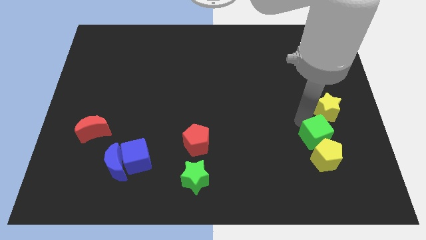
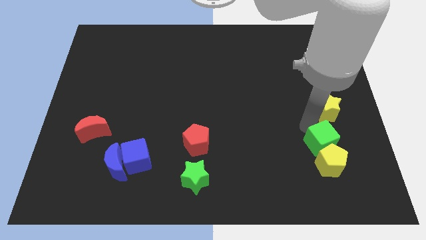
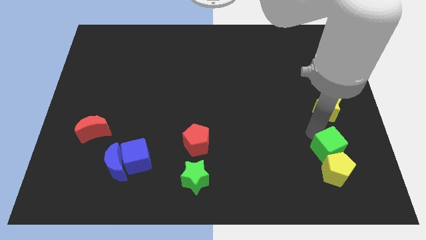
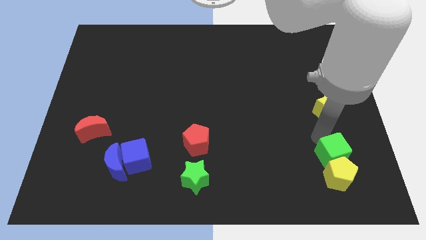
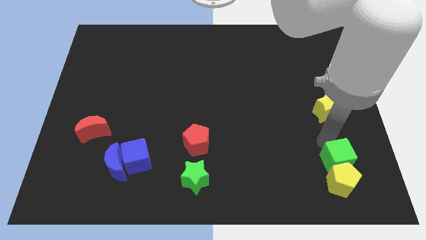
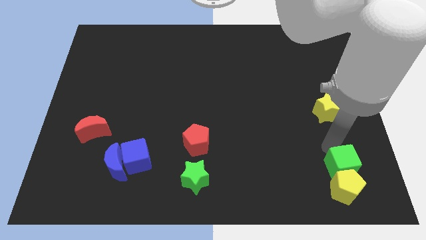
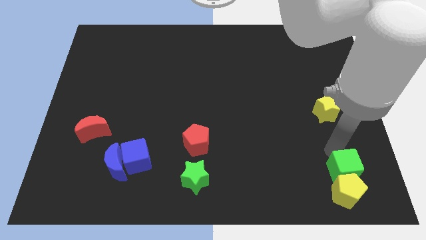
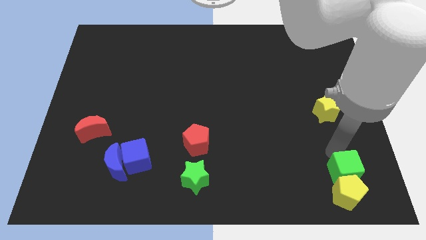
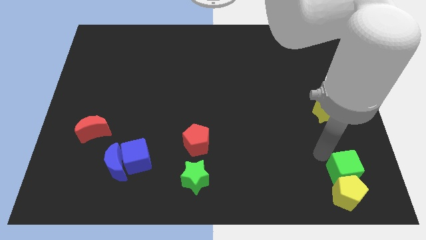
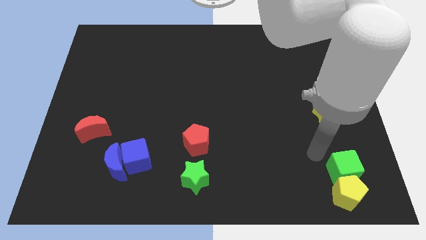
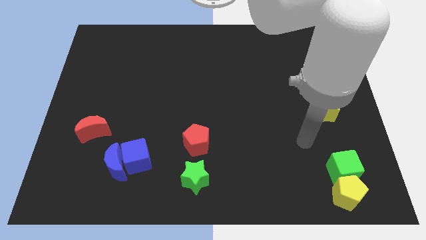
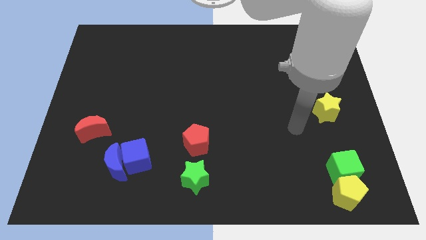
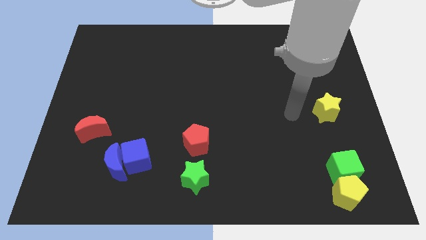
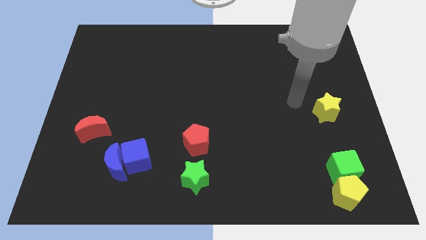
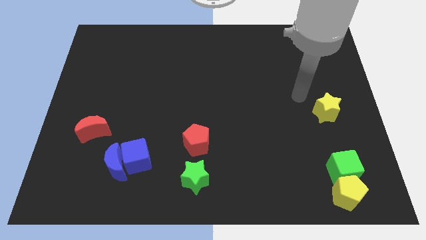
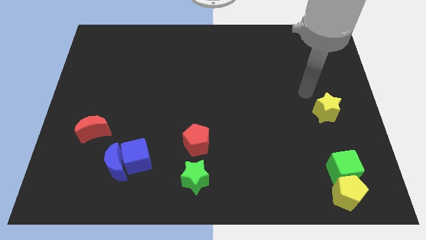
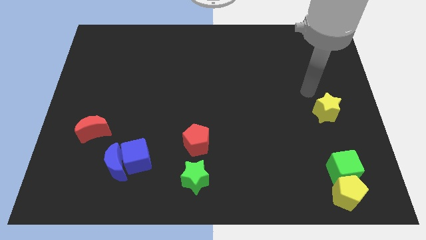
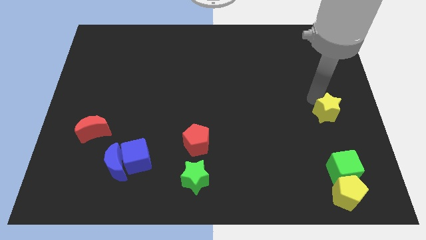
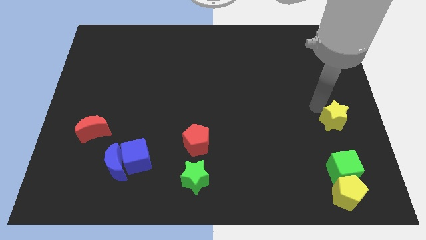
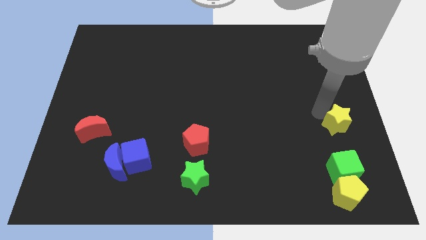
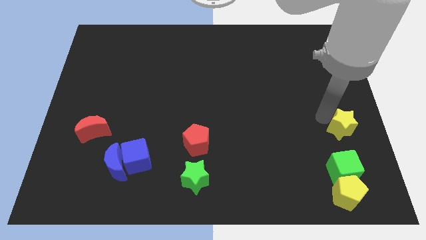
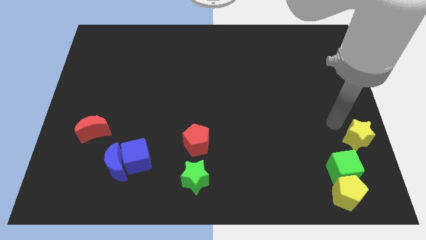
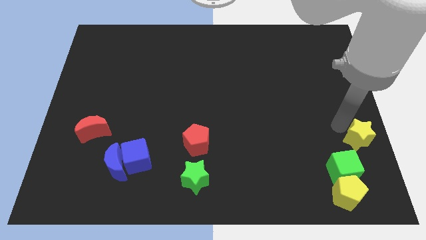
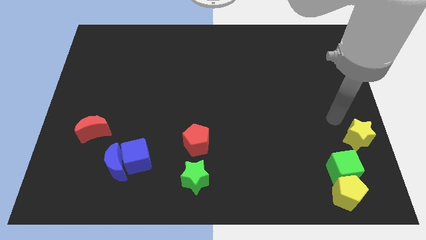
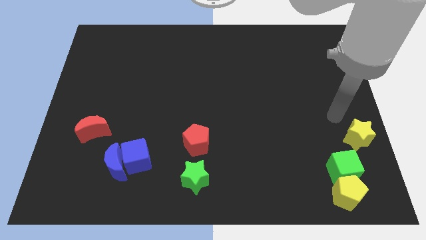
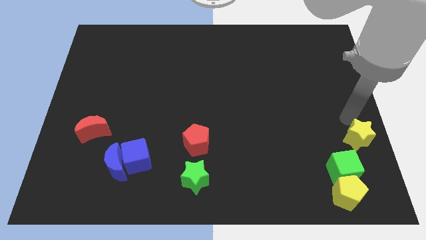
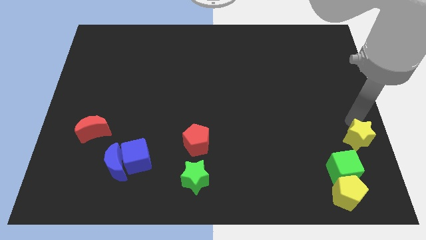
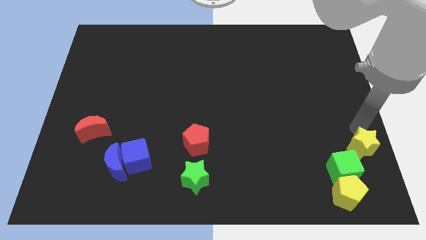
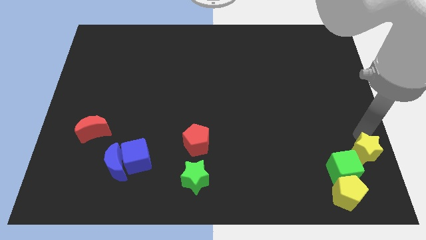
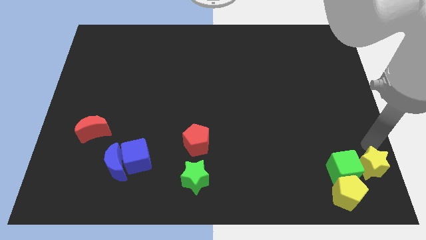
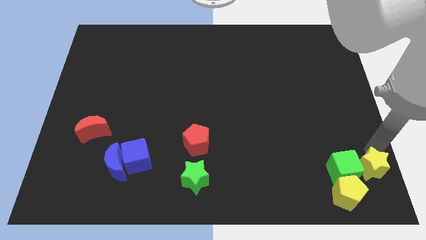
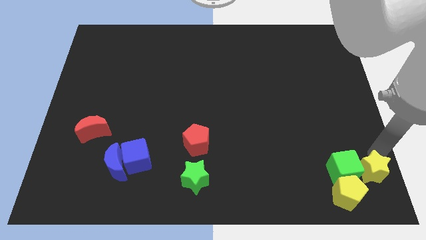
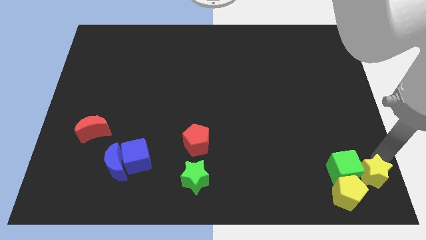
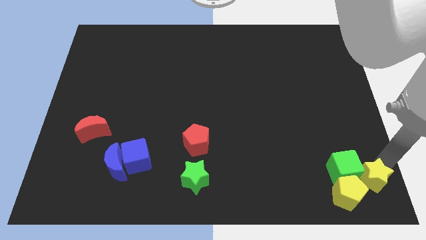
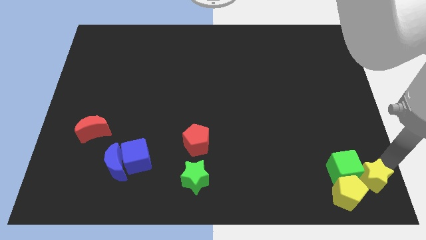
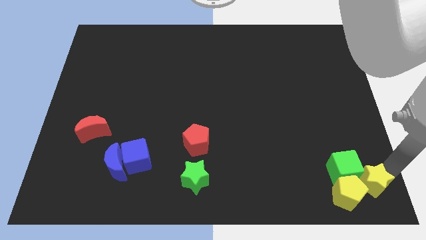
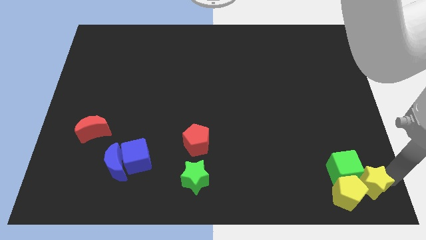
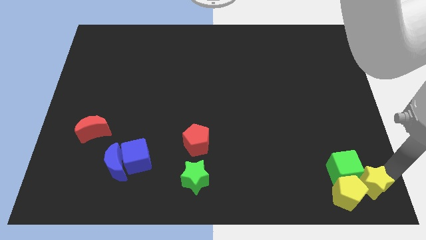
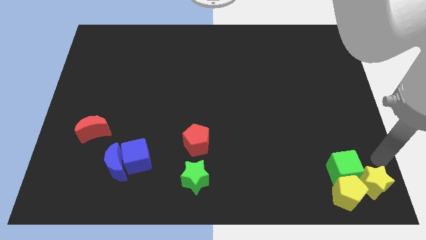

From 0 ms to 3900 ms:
push yellow star to the bottom right of green cube

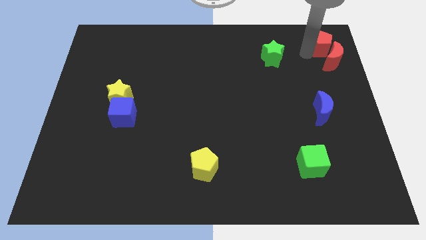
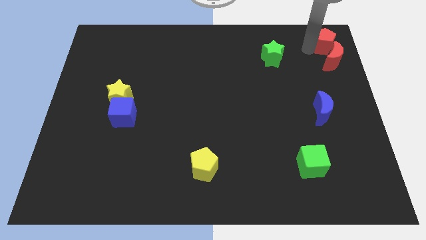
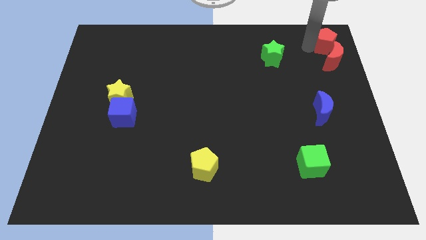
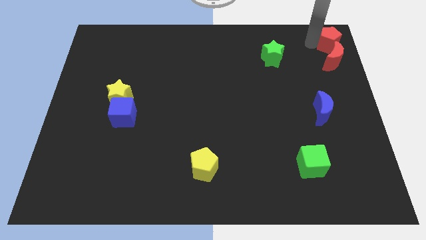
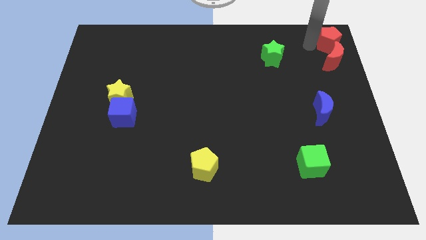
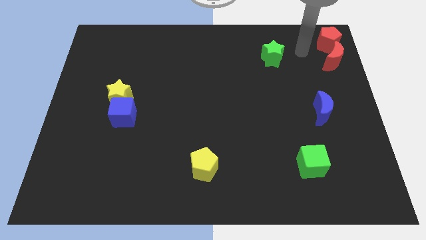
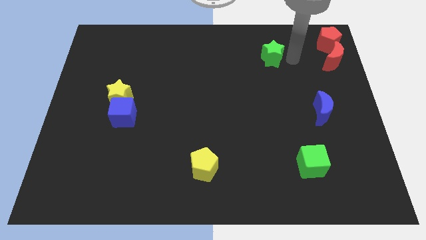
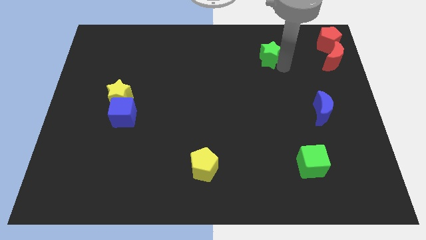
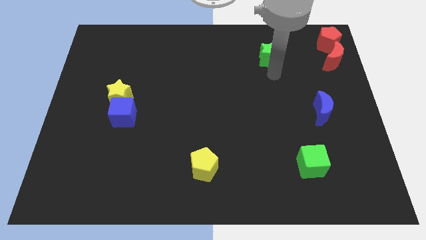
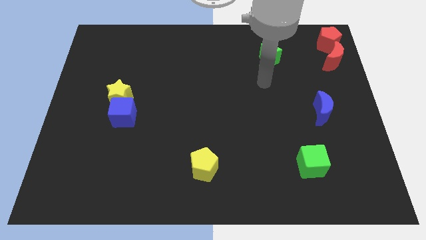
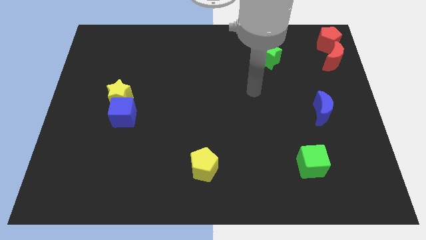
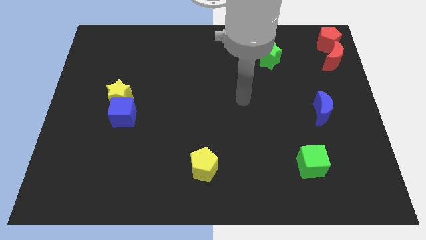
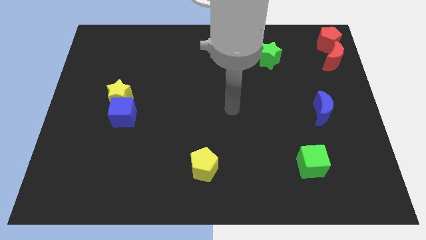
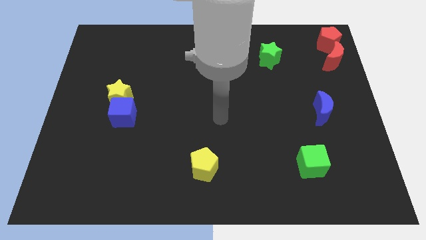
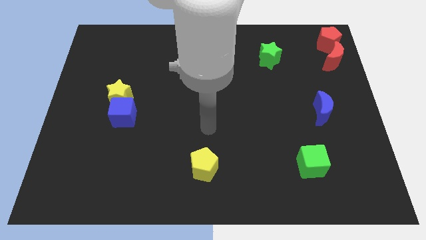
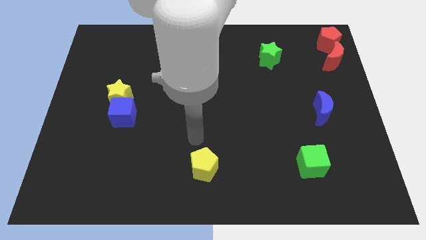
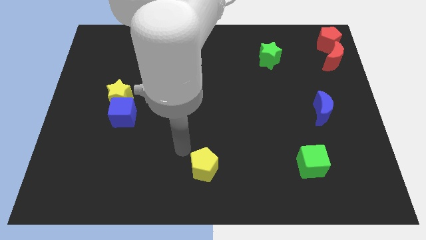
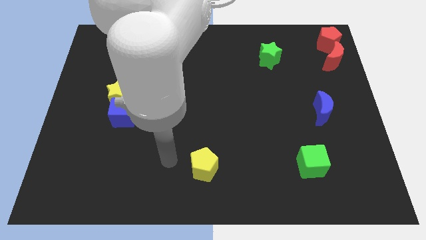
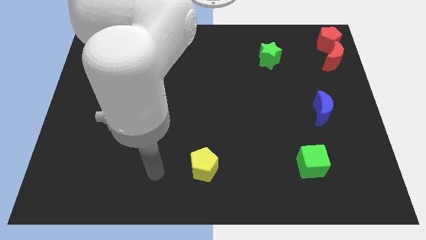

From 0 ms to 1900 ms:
move your arm towards the yellow pentagon

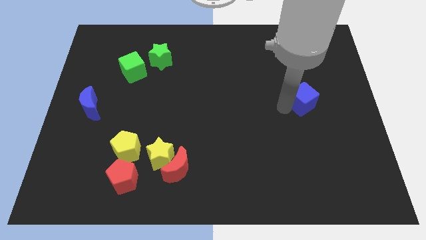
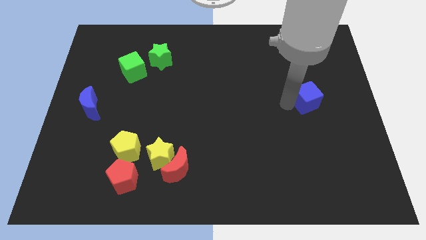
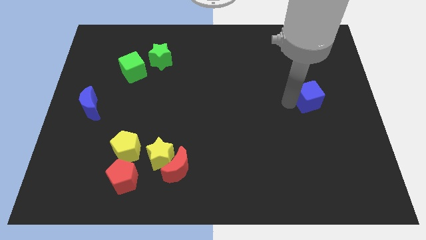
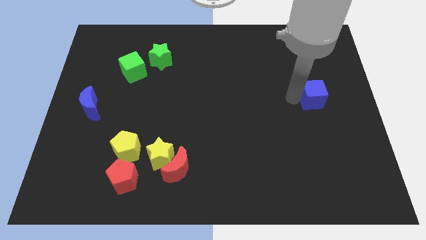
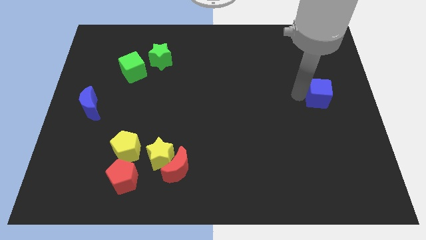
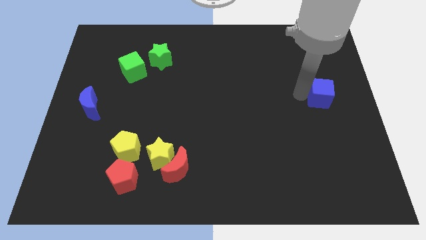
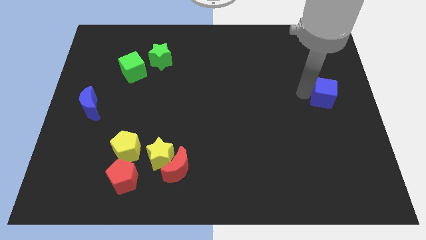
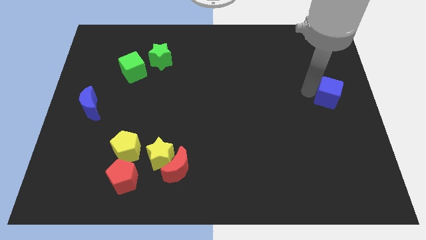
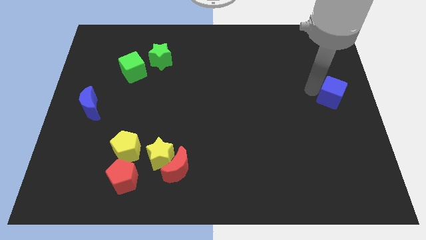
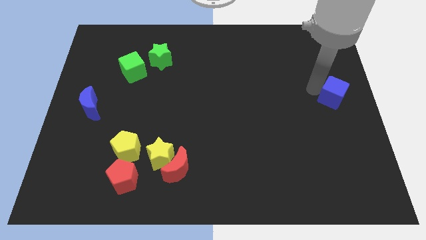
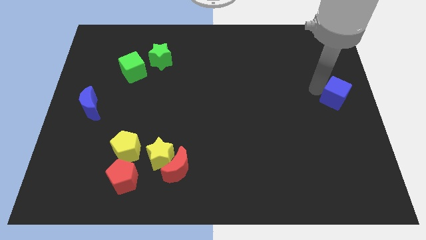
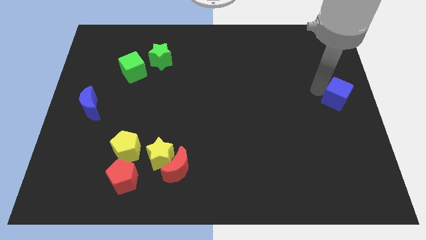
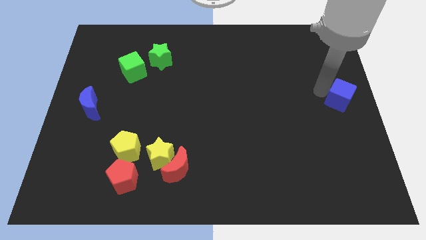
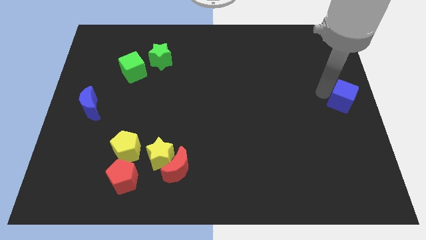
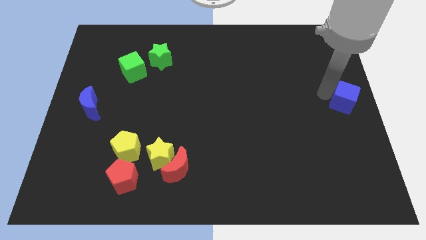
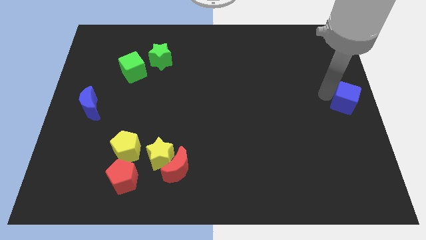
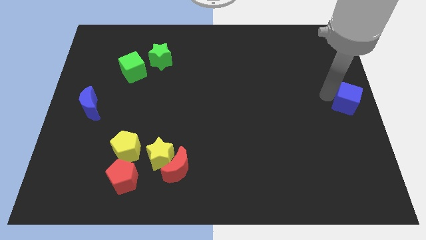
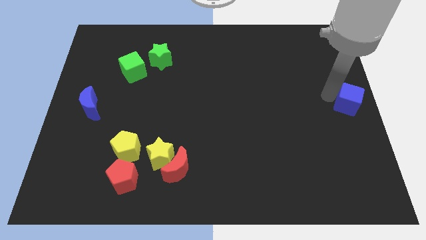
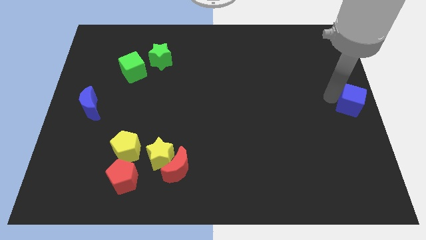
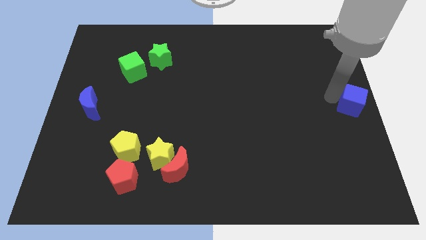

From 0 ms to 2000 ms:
place the blue cube at the center right of the board

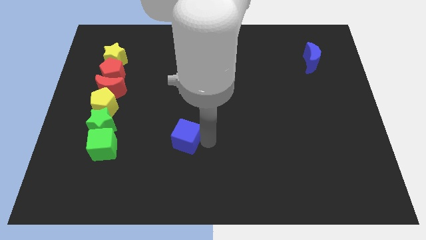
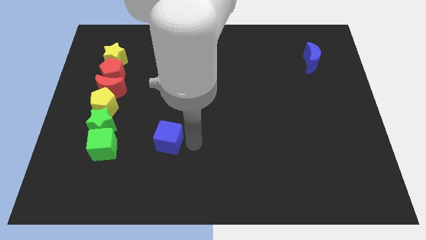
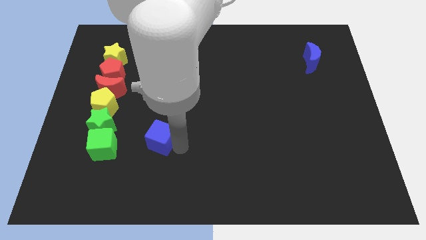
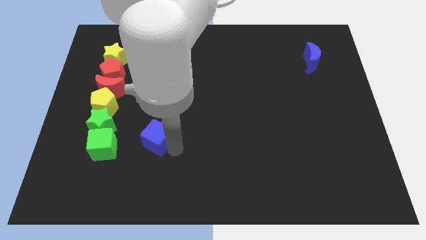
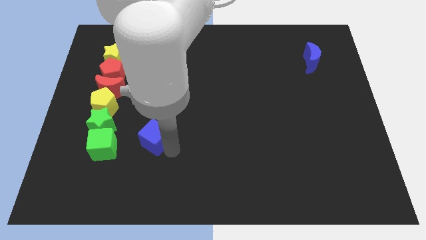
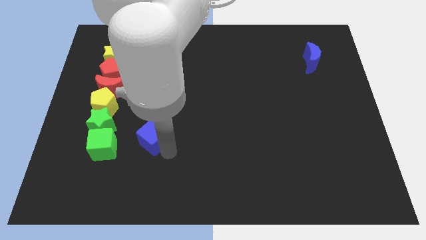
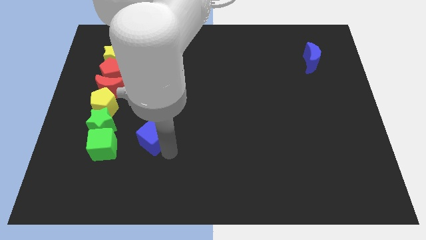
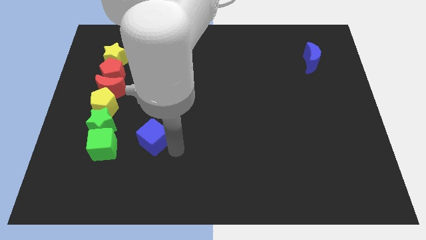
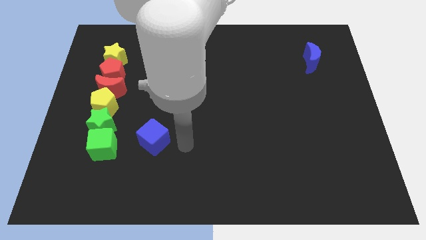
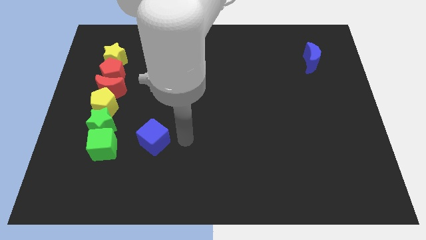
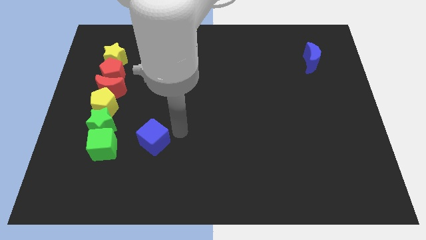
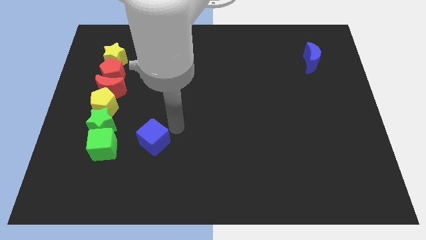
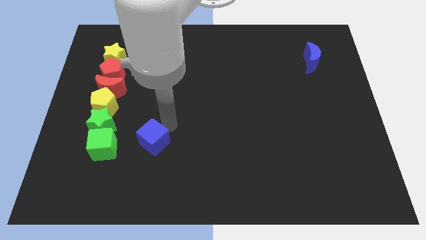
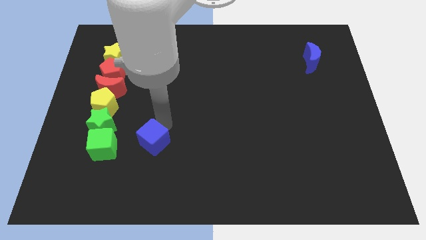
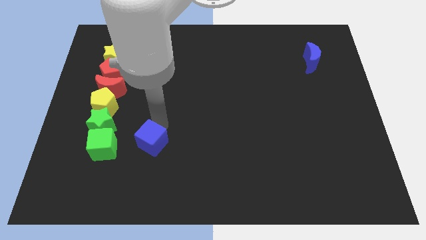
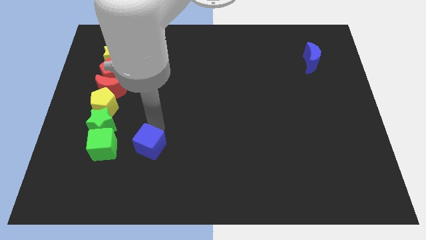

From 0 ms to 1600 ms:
put the blue cube to the right of the green cube
